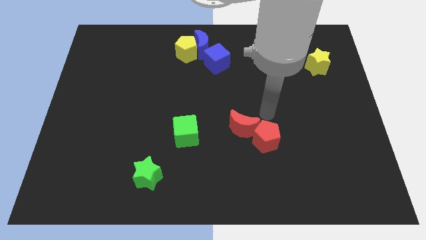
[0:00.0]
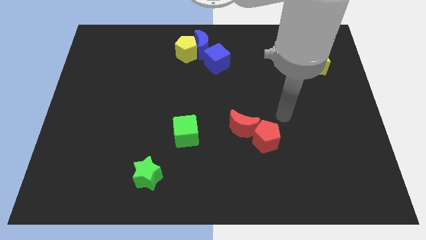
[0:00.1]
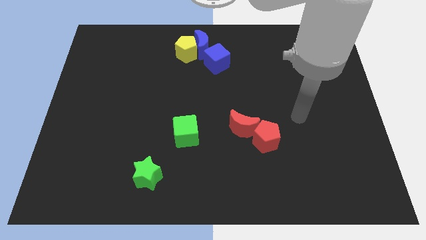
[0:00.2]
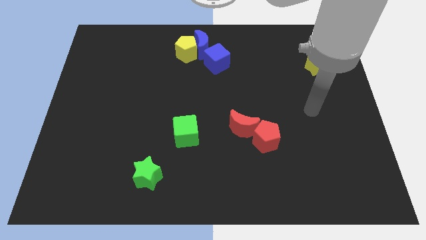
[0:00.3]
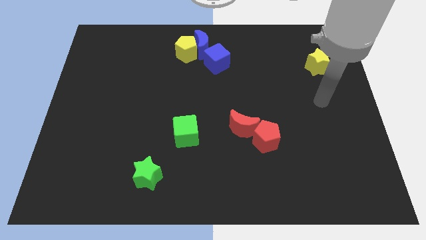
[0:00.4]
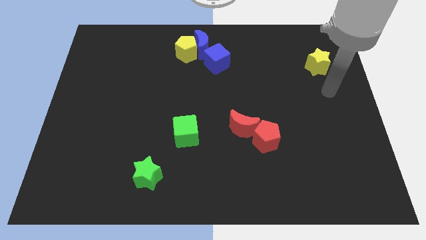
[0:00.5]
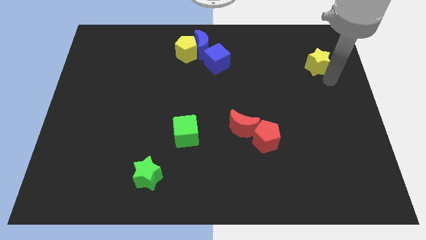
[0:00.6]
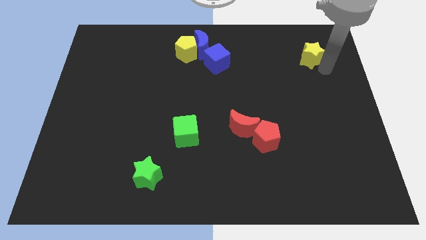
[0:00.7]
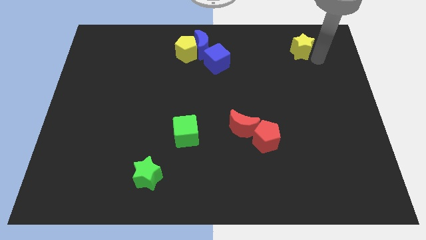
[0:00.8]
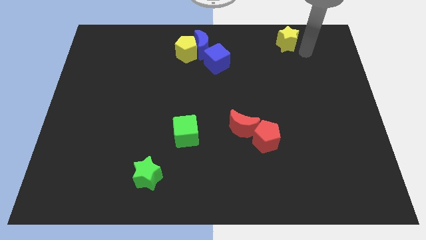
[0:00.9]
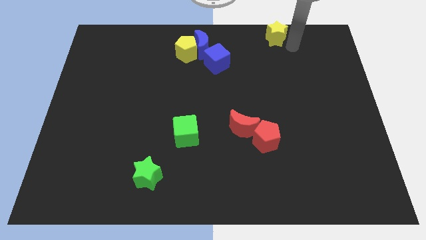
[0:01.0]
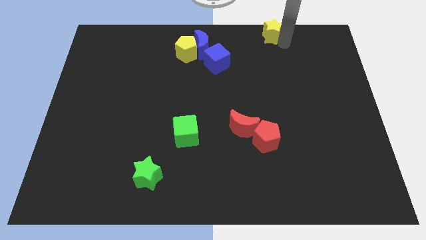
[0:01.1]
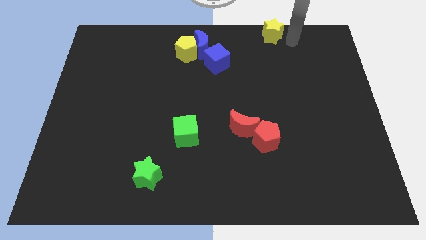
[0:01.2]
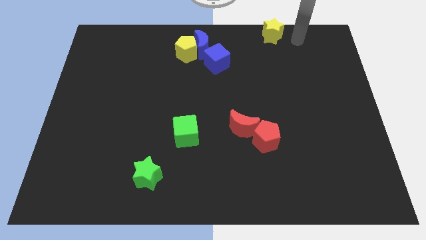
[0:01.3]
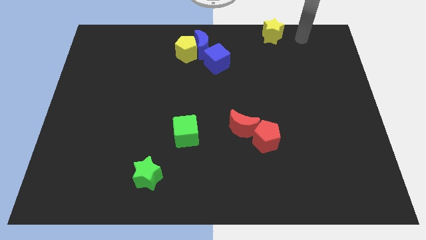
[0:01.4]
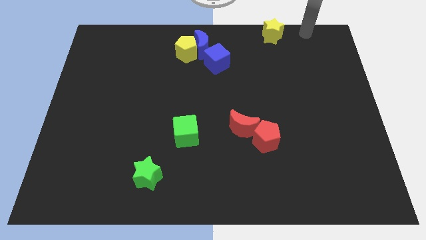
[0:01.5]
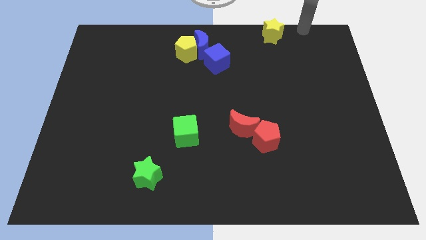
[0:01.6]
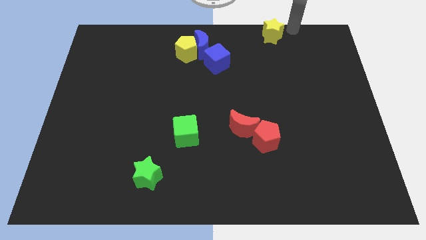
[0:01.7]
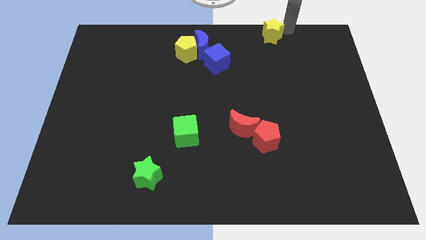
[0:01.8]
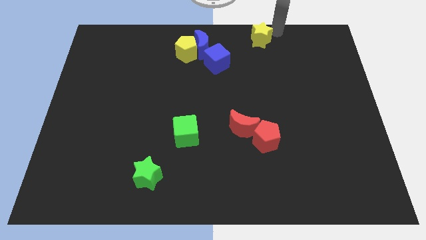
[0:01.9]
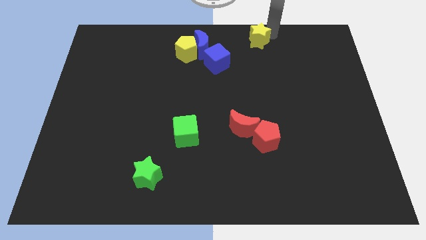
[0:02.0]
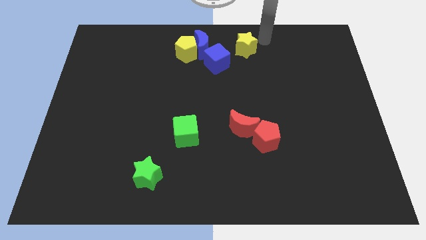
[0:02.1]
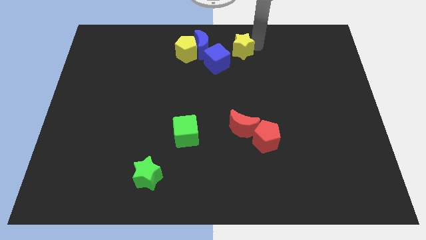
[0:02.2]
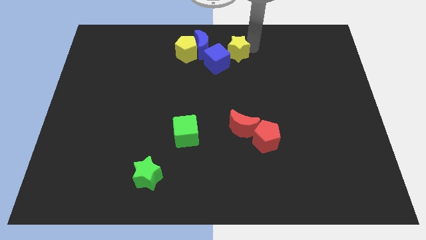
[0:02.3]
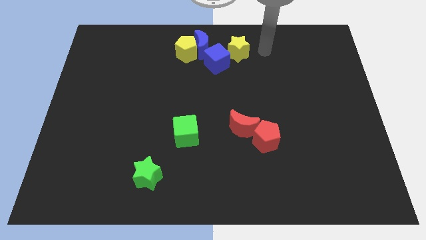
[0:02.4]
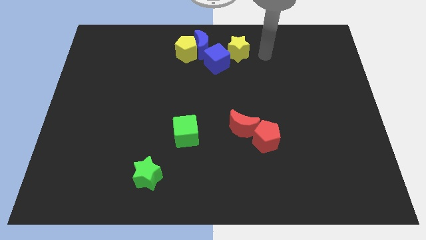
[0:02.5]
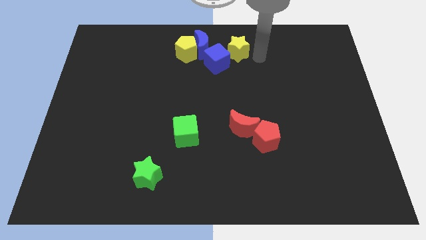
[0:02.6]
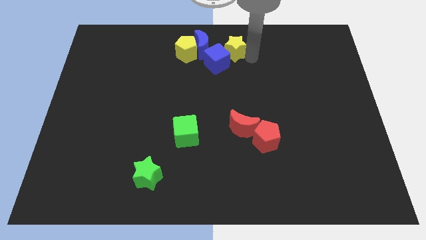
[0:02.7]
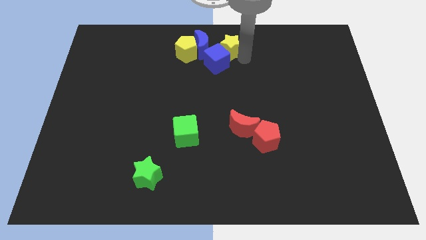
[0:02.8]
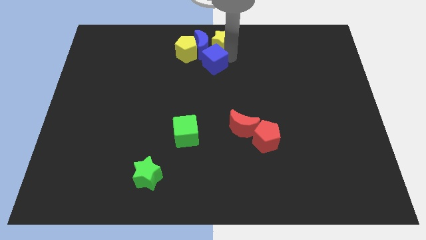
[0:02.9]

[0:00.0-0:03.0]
push the yellow star into the group of blue blocks

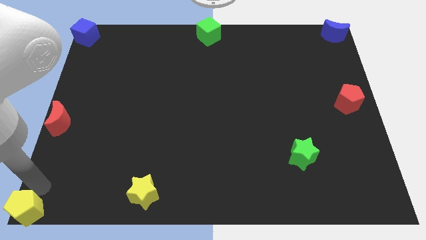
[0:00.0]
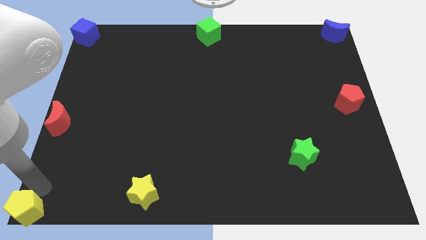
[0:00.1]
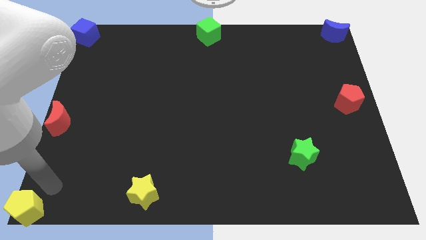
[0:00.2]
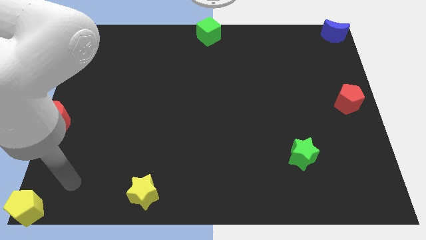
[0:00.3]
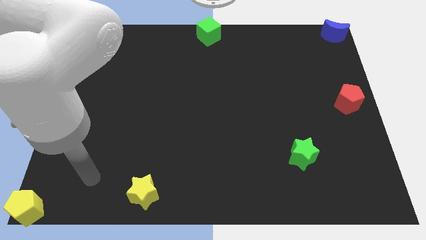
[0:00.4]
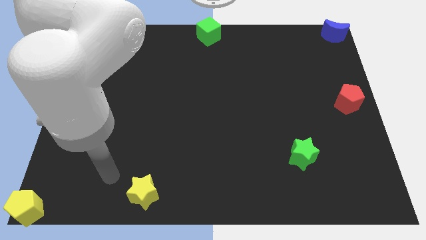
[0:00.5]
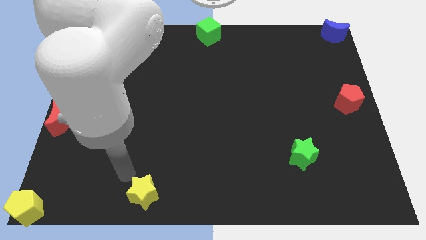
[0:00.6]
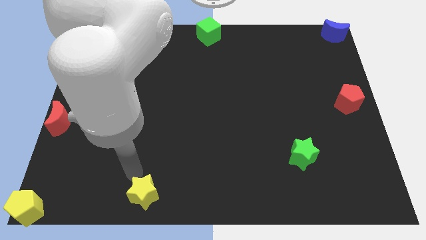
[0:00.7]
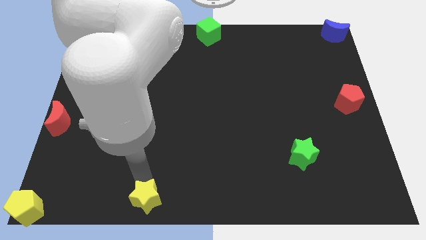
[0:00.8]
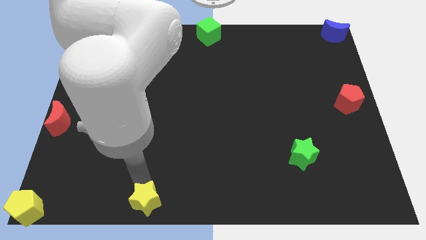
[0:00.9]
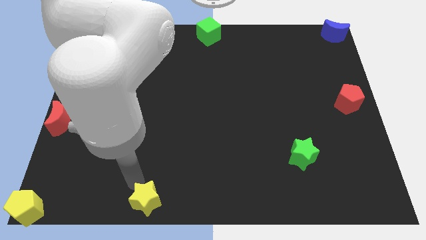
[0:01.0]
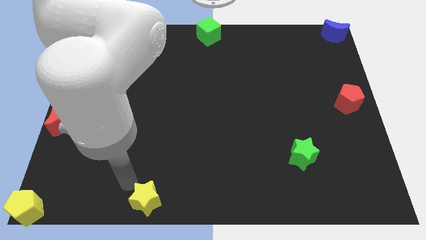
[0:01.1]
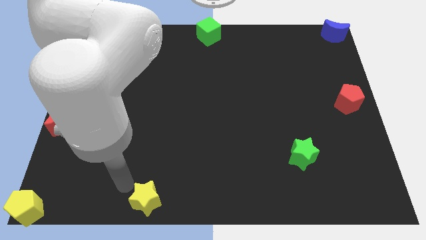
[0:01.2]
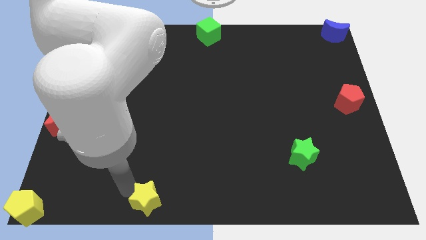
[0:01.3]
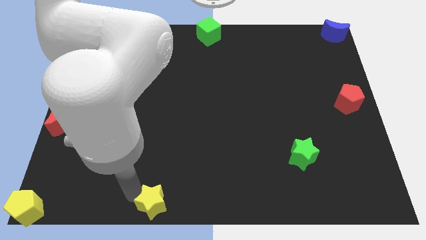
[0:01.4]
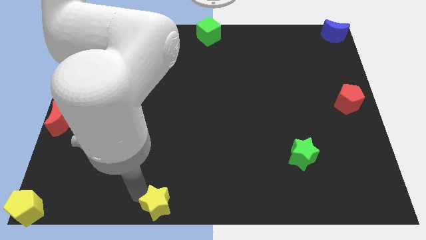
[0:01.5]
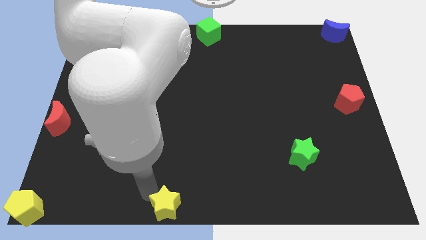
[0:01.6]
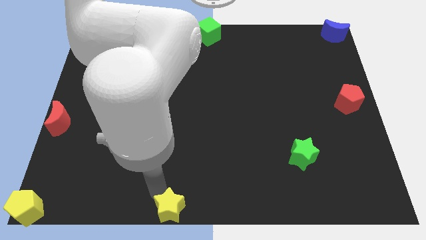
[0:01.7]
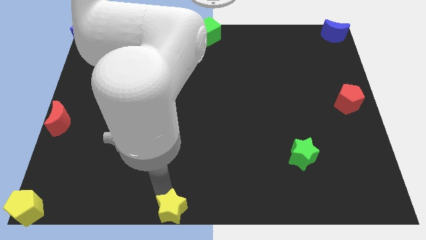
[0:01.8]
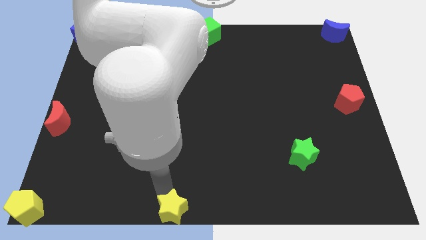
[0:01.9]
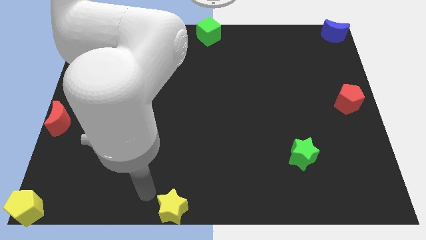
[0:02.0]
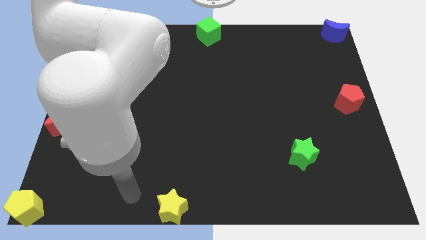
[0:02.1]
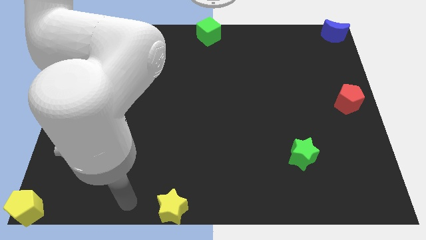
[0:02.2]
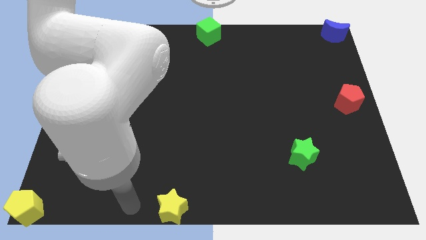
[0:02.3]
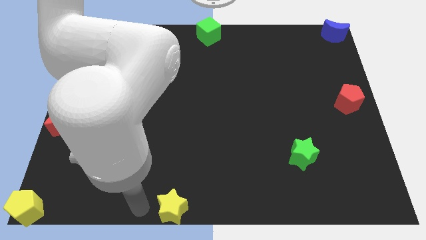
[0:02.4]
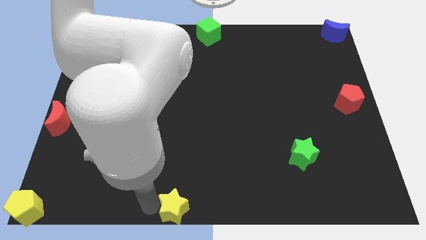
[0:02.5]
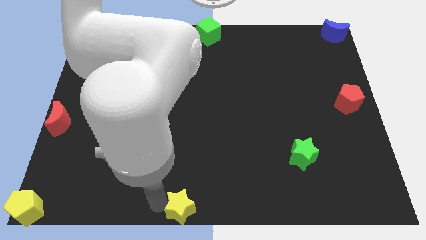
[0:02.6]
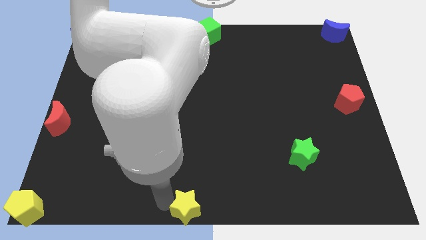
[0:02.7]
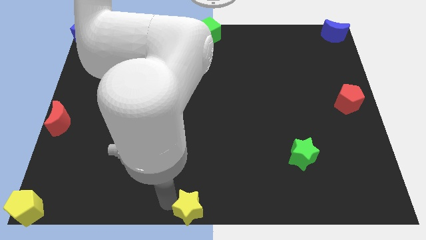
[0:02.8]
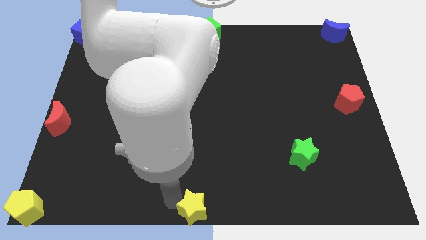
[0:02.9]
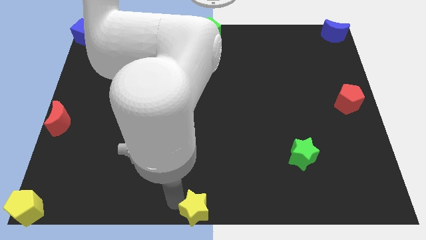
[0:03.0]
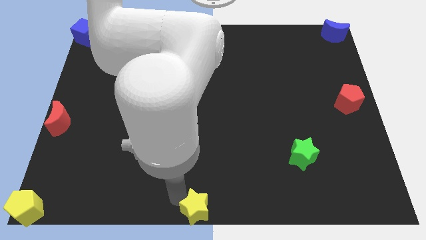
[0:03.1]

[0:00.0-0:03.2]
move the yellow star towards the bottom center

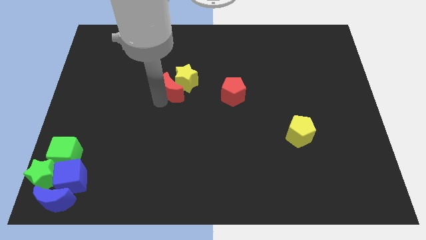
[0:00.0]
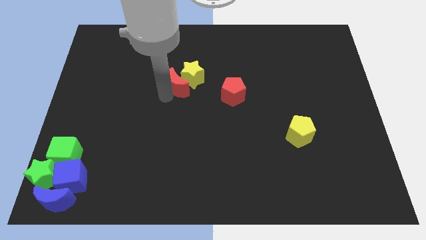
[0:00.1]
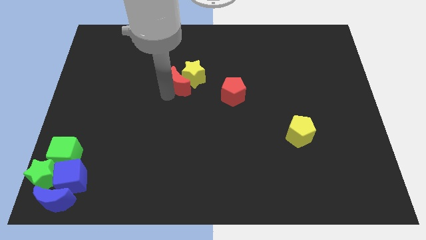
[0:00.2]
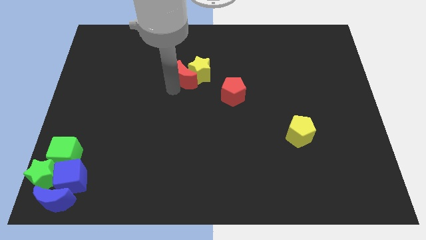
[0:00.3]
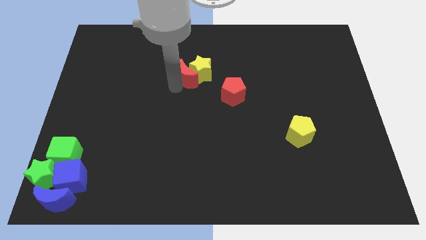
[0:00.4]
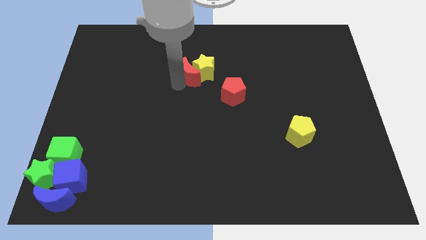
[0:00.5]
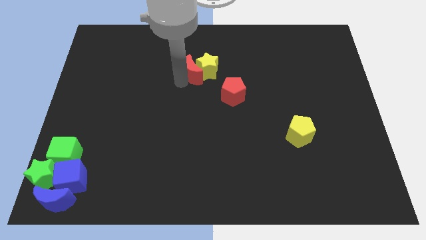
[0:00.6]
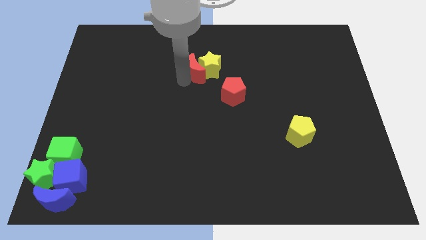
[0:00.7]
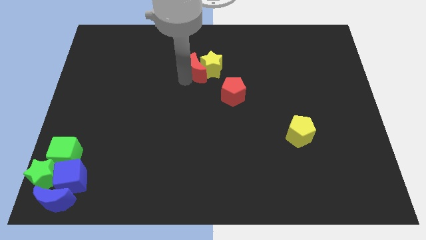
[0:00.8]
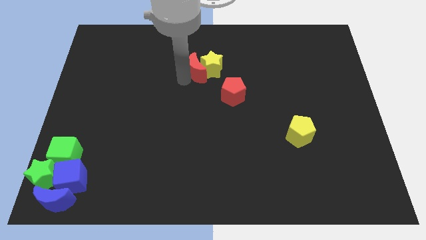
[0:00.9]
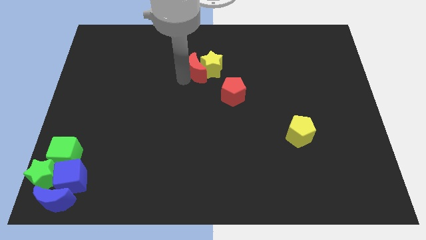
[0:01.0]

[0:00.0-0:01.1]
slide red moon along with yellow star to the top left of red pentagon

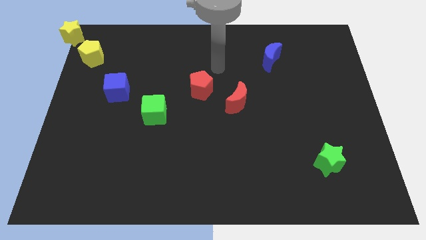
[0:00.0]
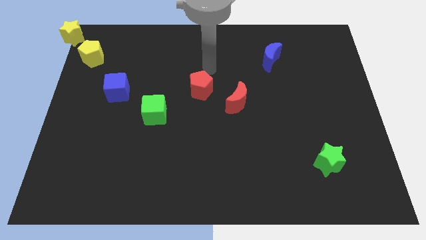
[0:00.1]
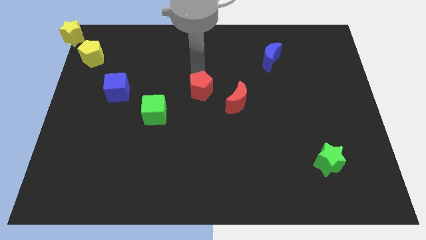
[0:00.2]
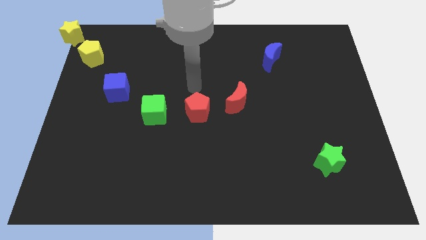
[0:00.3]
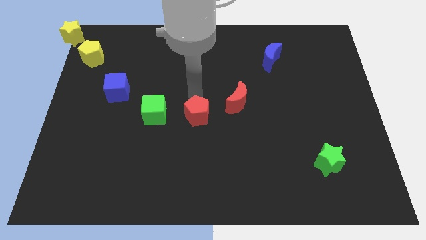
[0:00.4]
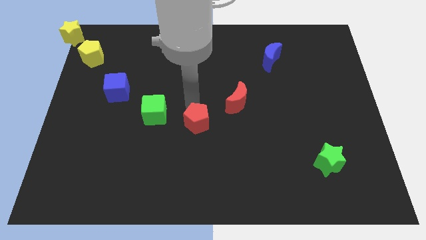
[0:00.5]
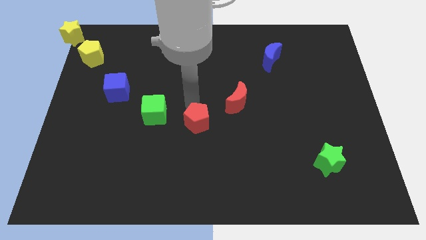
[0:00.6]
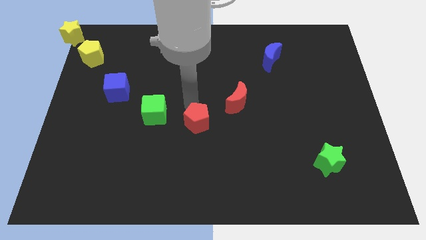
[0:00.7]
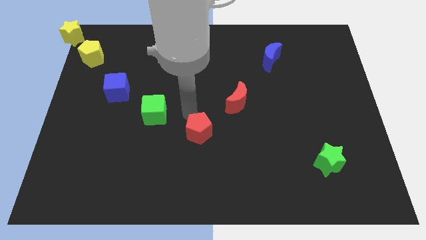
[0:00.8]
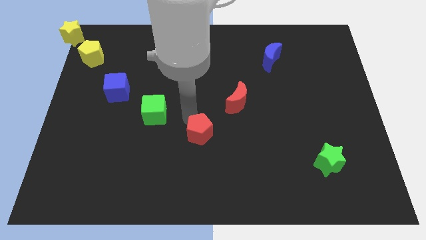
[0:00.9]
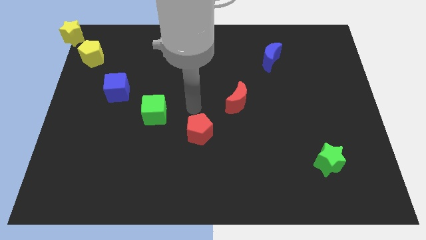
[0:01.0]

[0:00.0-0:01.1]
push the red pentagon to the bottom of the board

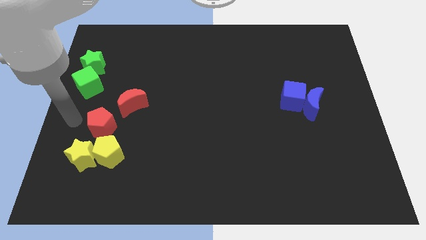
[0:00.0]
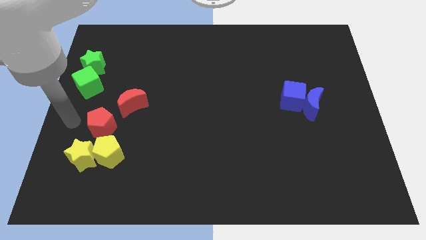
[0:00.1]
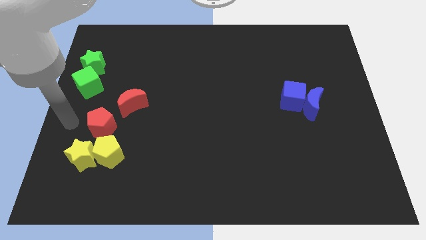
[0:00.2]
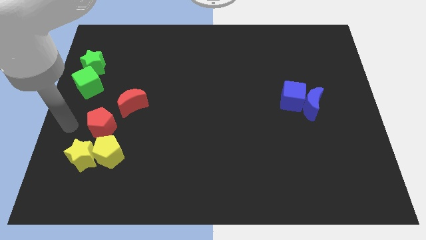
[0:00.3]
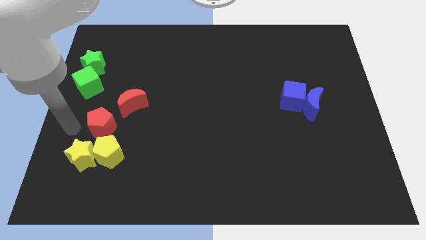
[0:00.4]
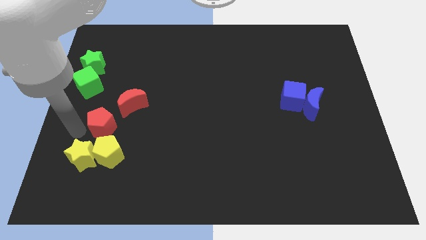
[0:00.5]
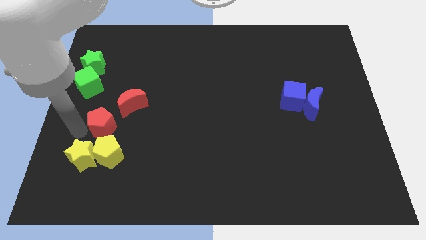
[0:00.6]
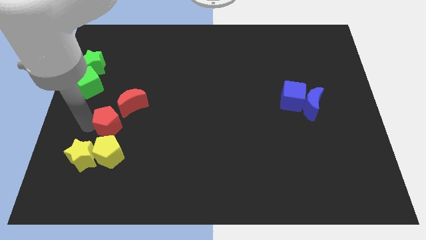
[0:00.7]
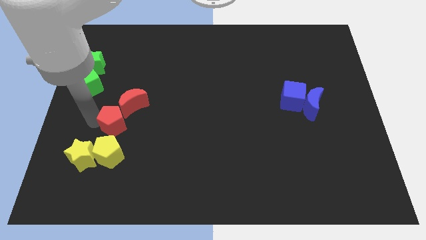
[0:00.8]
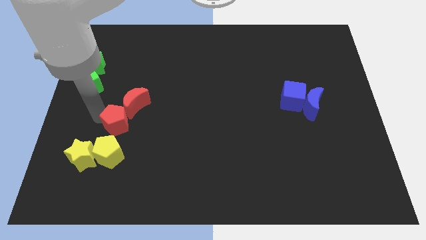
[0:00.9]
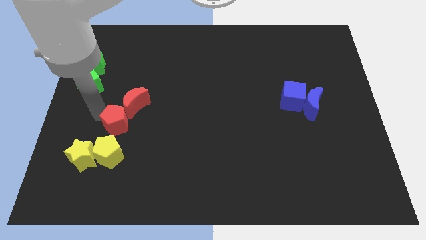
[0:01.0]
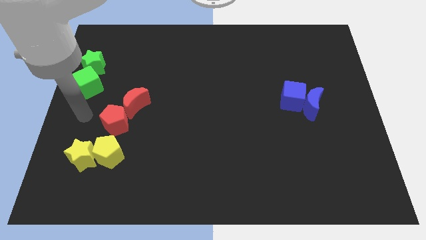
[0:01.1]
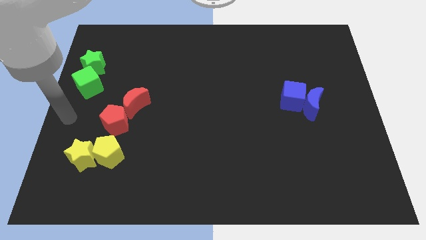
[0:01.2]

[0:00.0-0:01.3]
push the red pentagon between yellow pentagon and red moon
